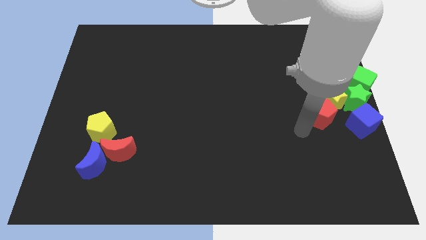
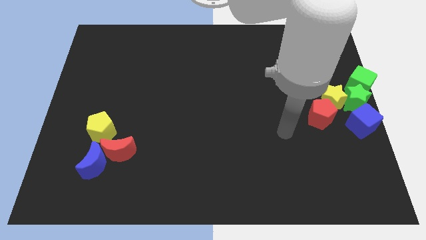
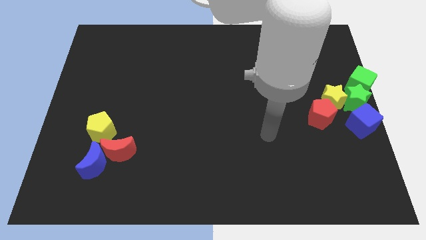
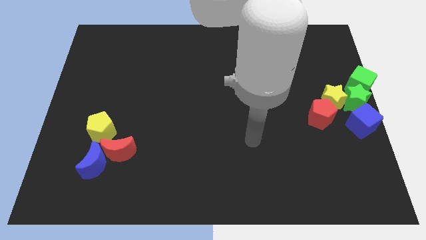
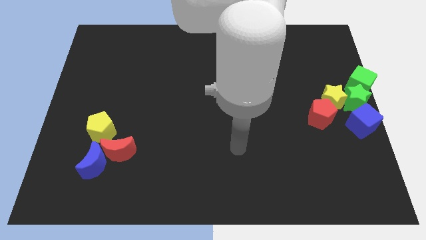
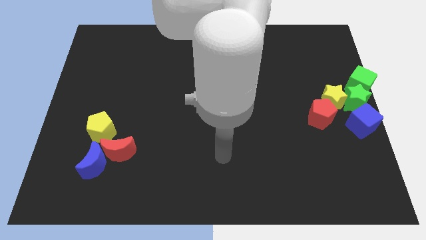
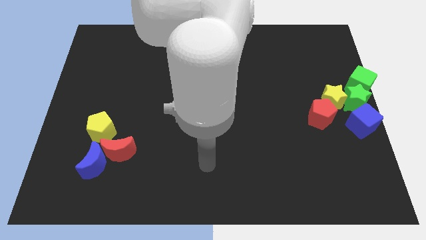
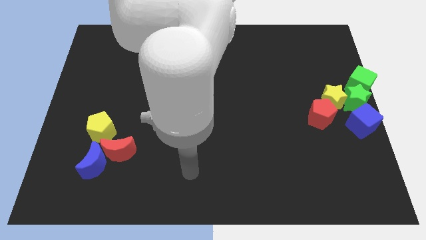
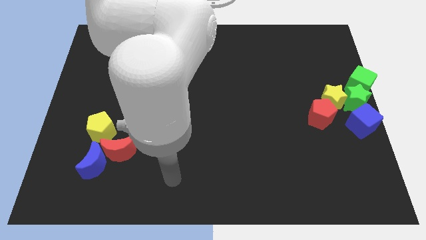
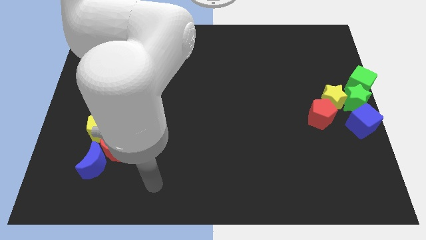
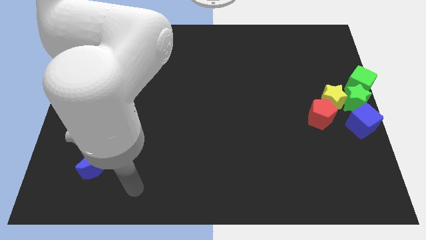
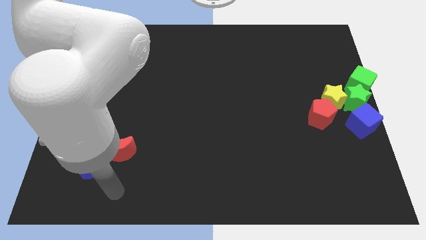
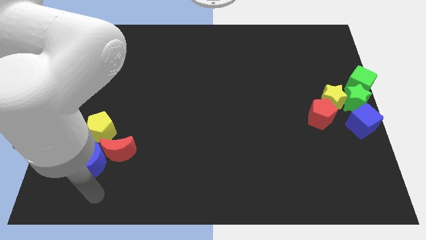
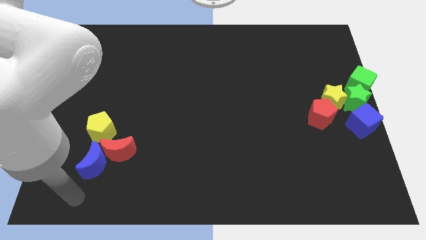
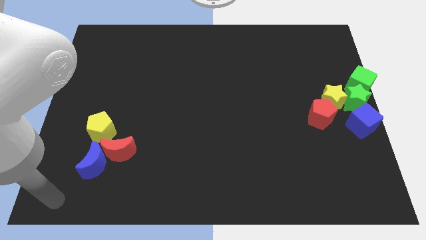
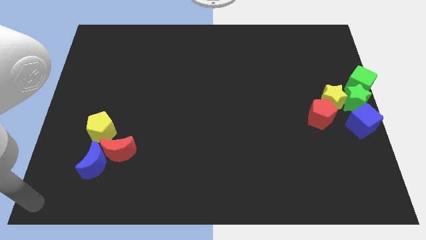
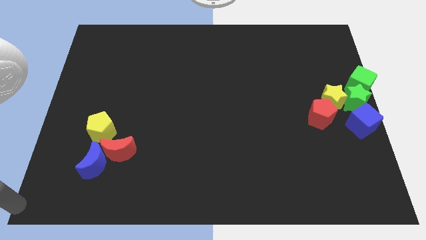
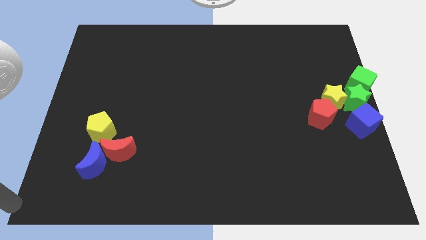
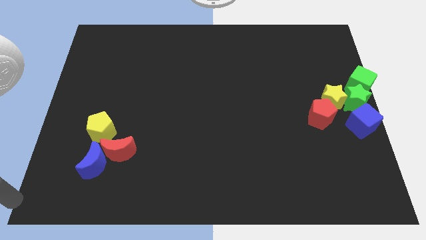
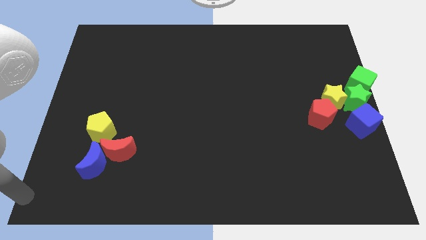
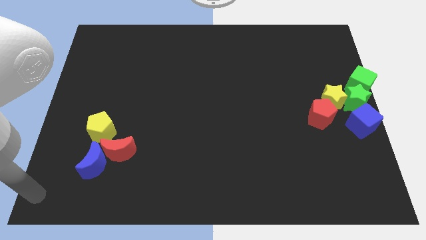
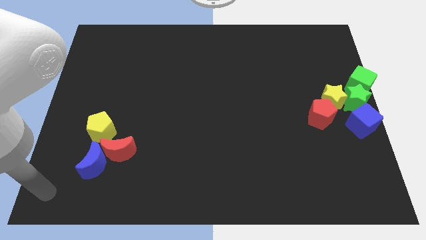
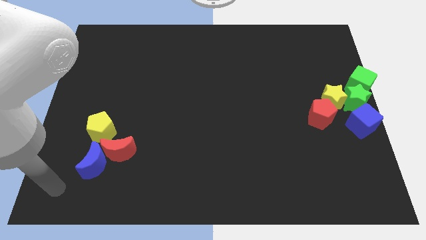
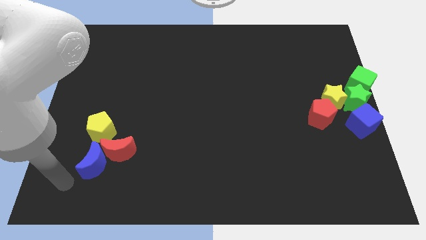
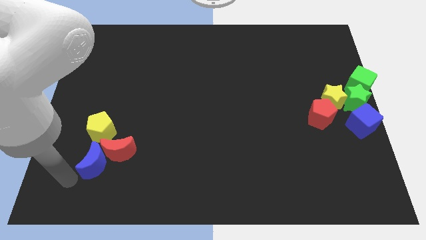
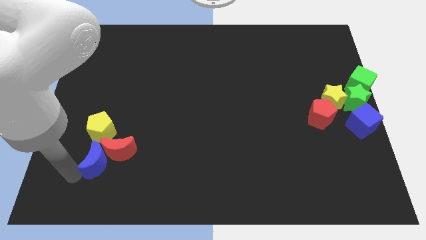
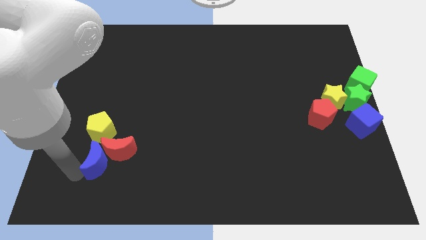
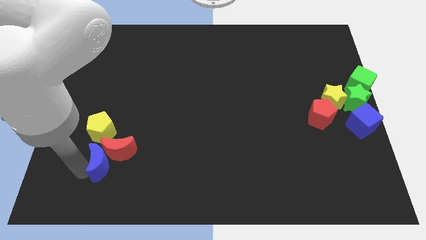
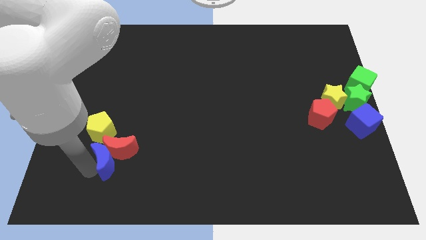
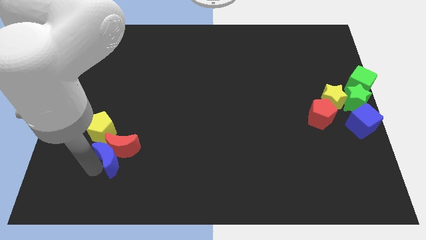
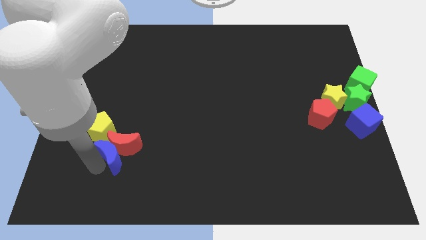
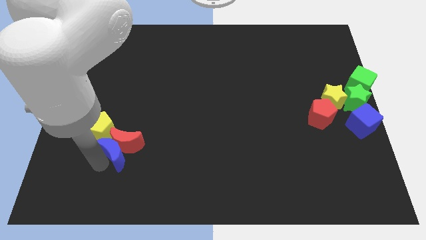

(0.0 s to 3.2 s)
push the blue crescent into the red crescent

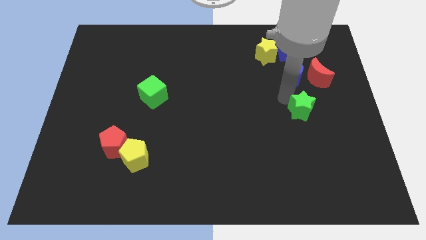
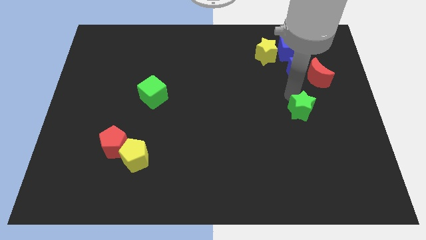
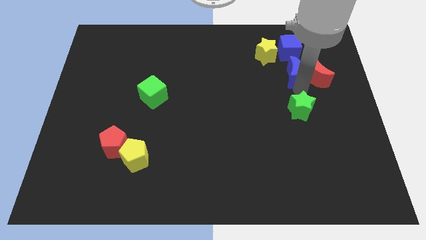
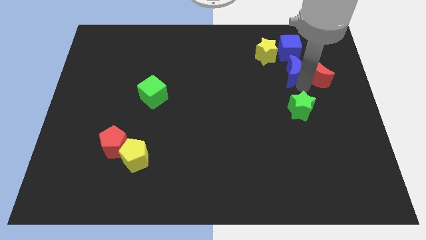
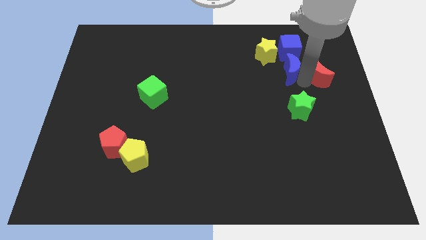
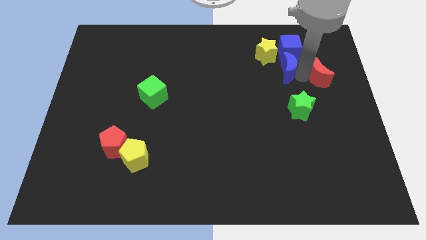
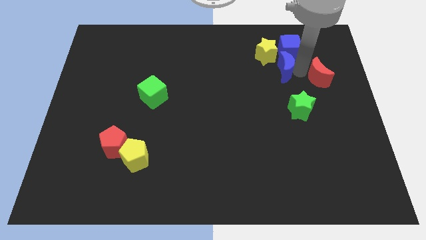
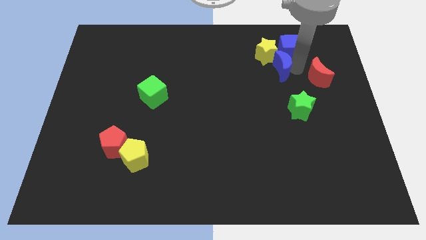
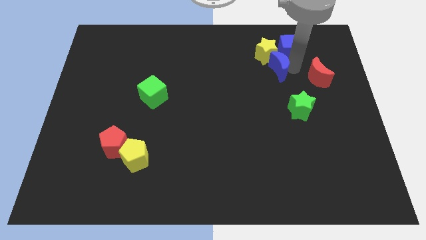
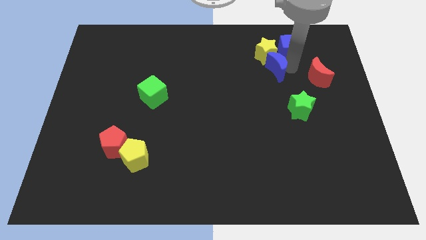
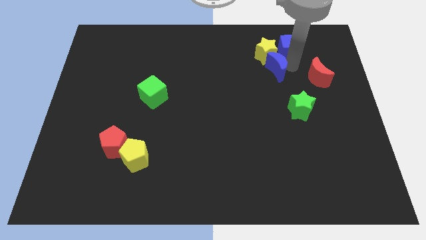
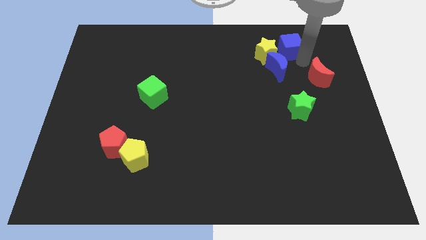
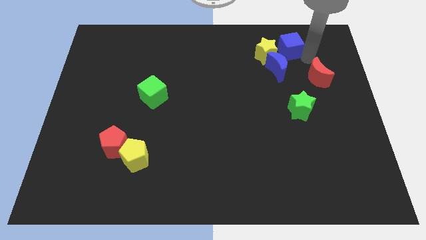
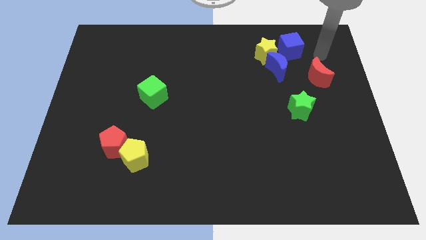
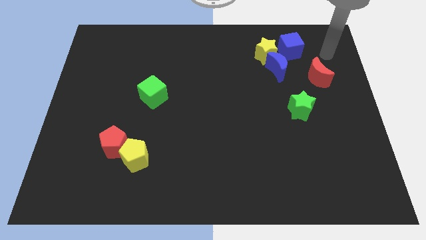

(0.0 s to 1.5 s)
slide the blue moon slightly to the left

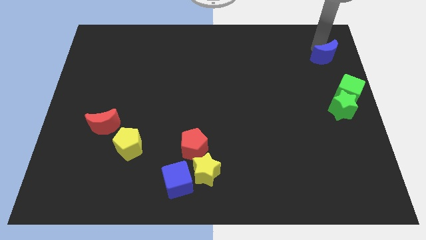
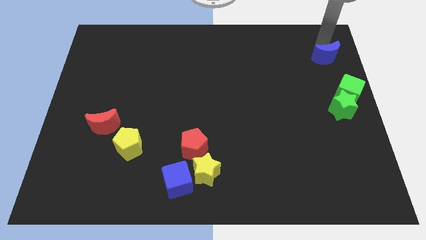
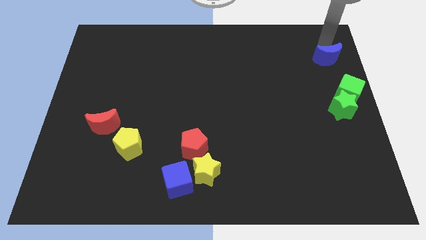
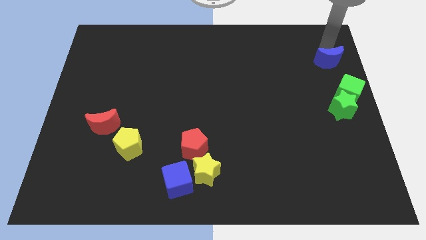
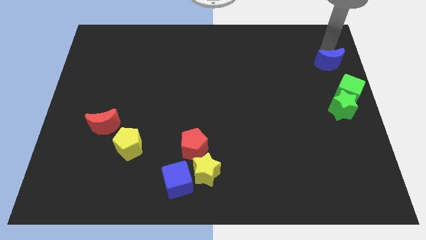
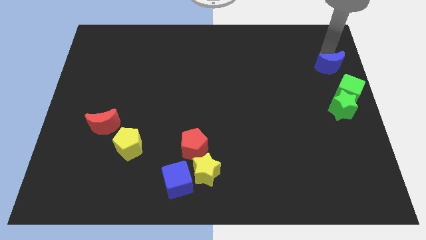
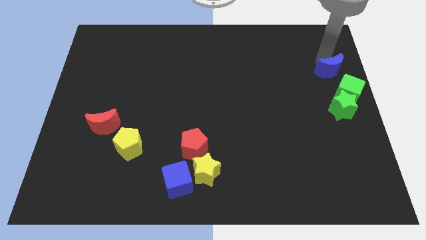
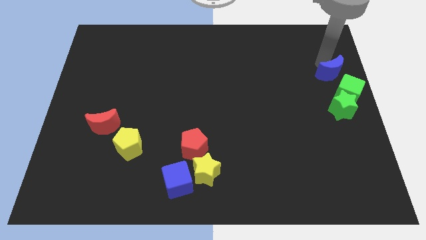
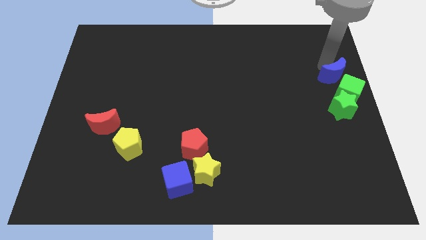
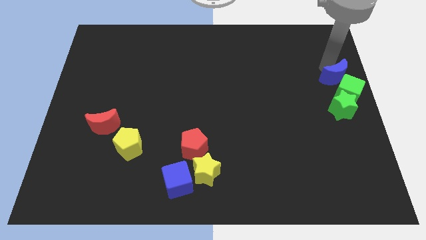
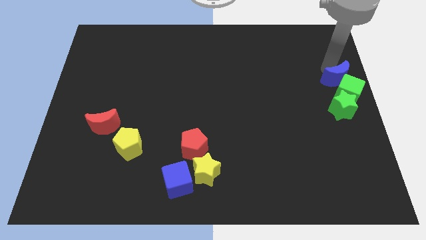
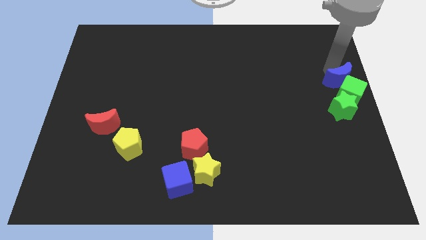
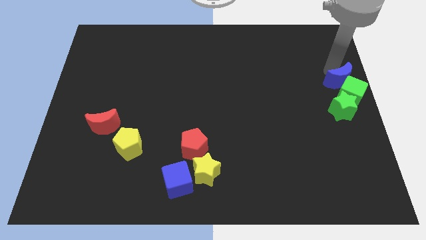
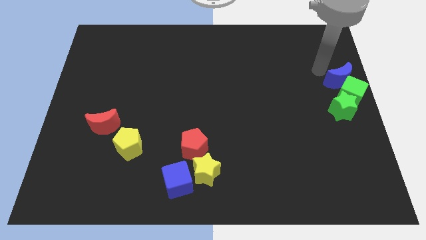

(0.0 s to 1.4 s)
move the blue crescent to the green cube

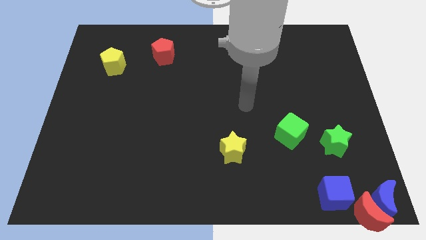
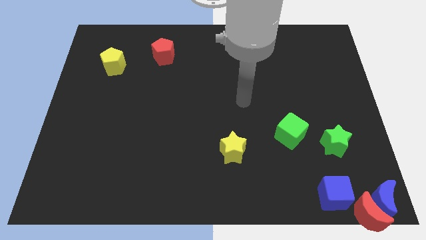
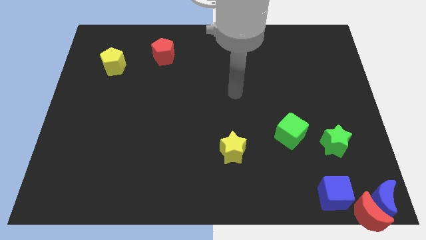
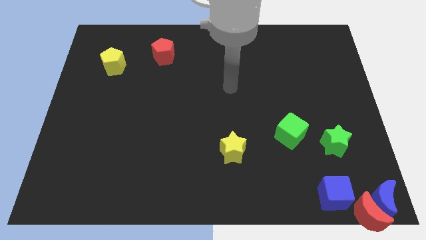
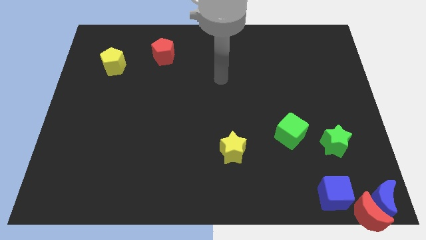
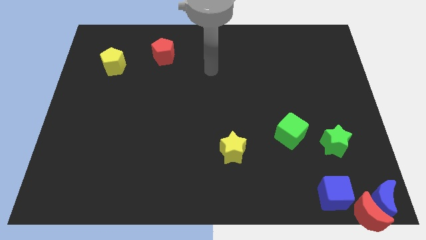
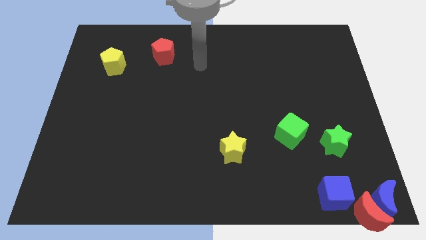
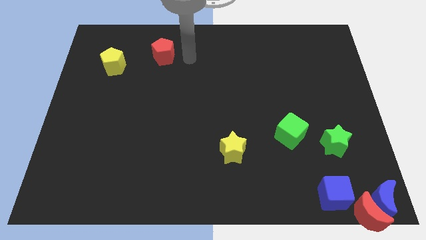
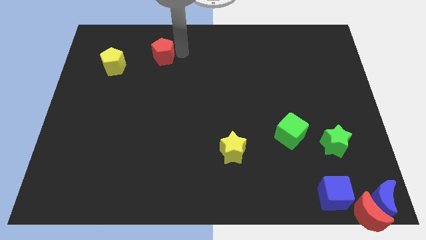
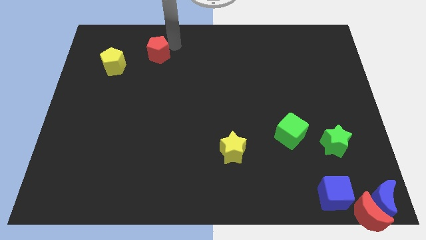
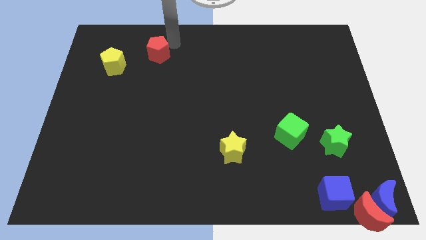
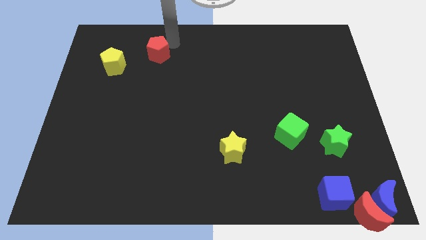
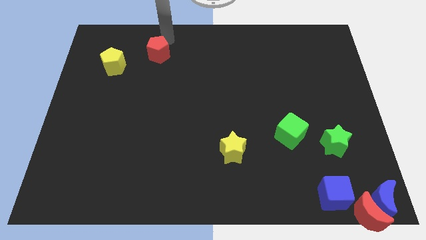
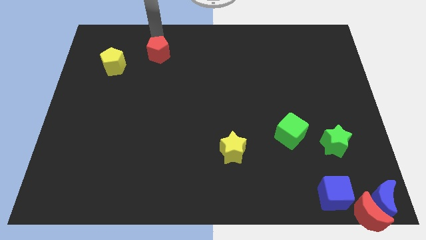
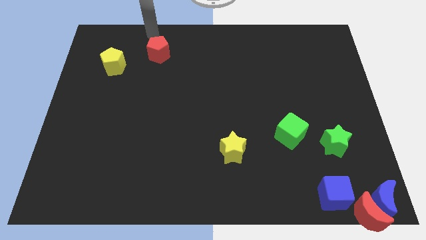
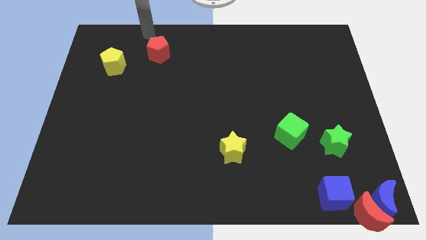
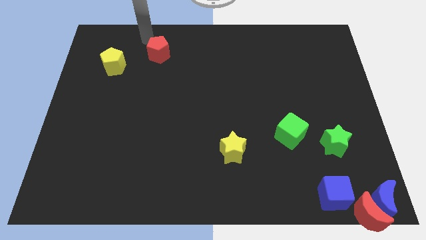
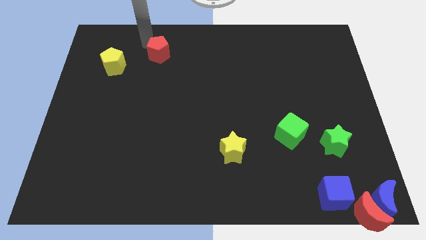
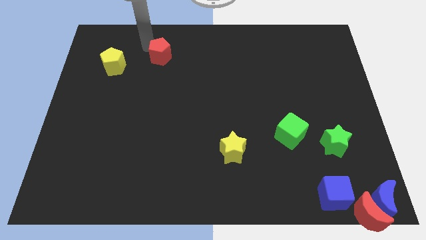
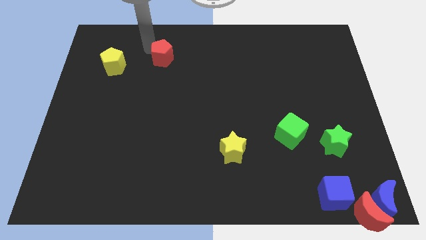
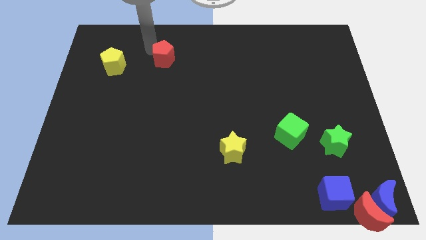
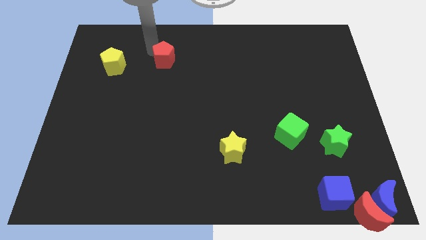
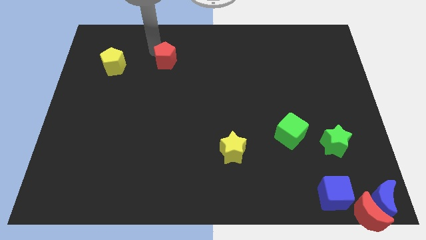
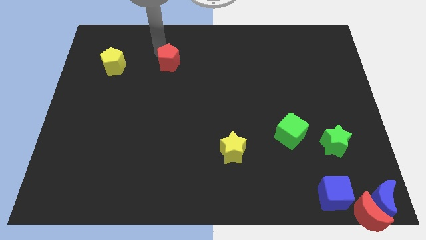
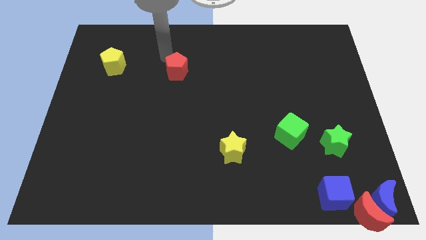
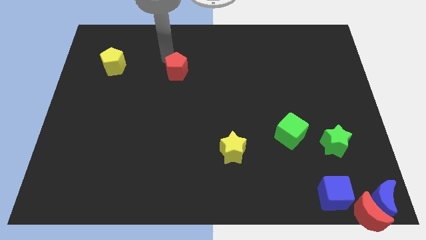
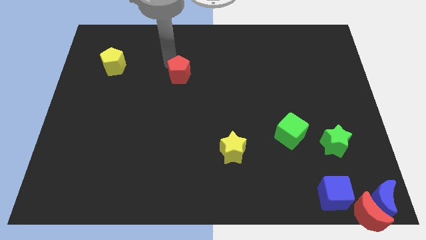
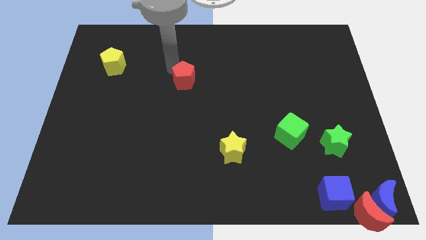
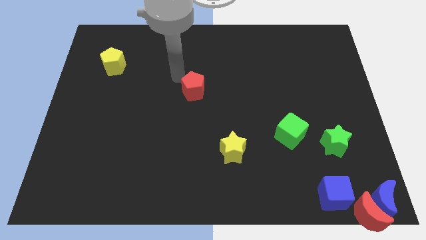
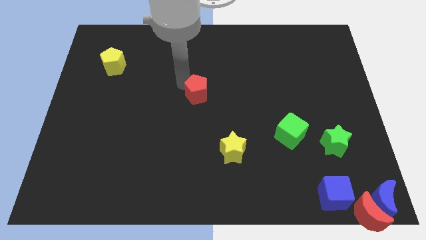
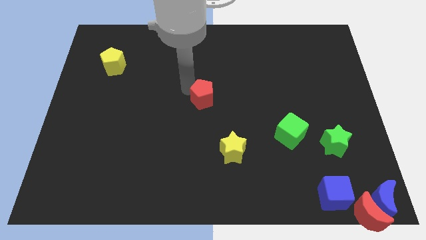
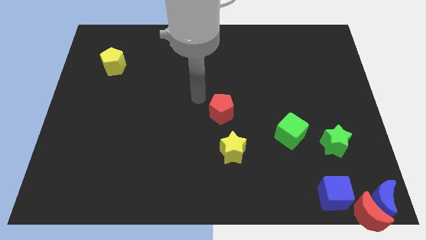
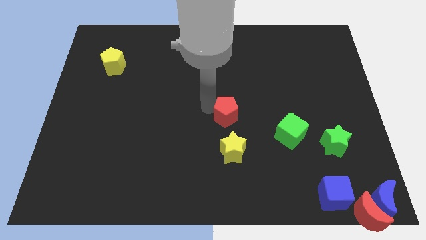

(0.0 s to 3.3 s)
place the red pentagon above the yellow star
